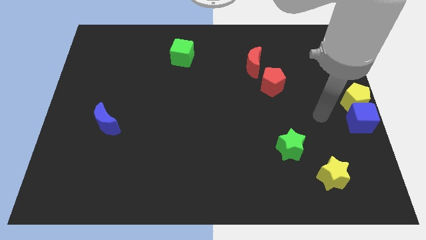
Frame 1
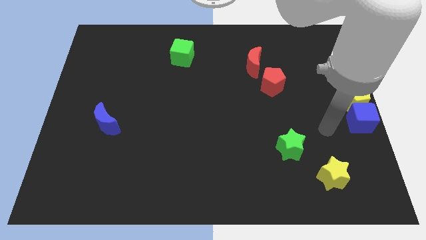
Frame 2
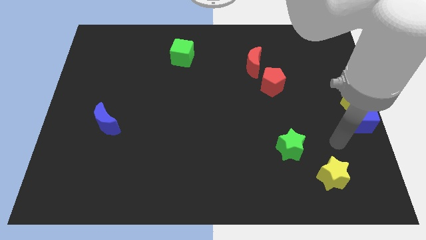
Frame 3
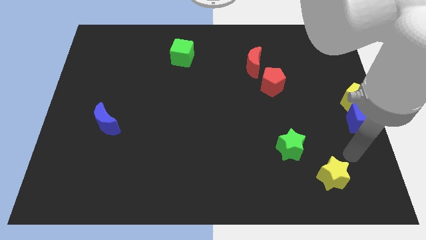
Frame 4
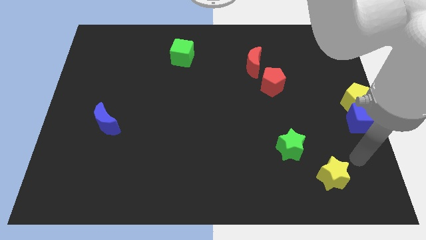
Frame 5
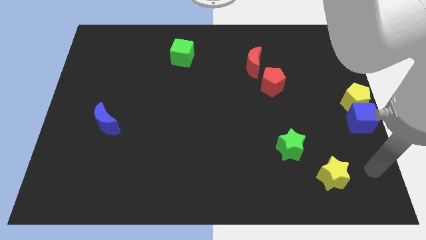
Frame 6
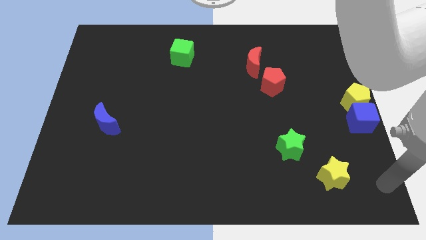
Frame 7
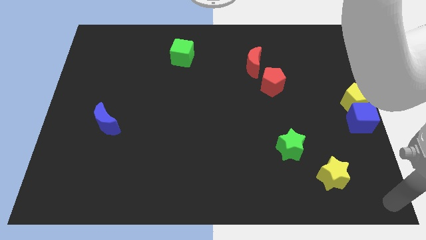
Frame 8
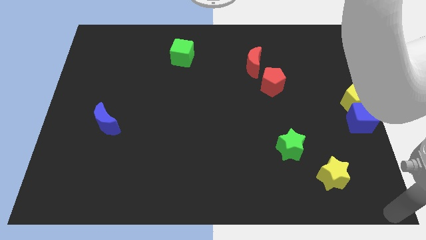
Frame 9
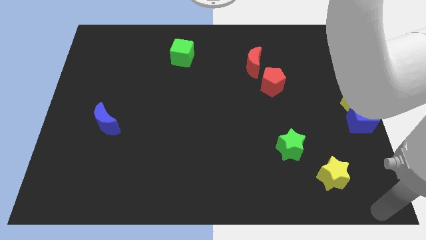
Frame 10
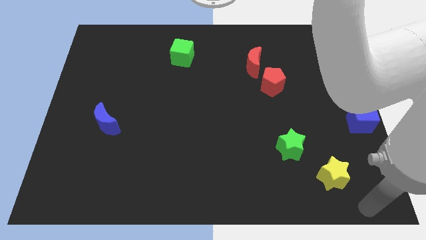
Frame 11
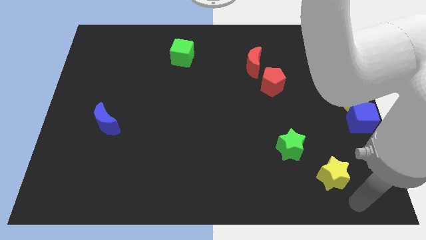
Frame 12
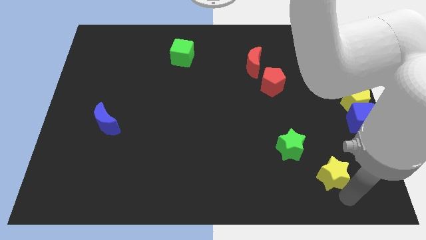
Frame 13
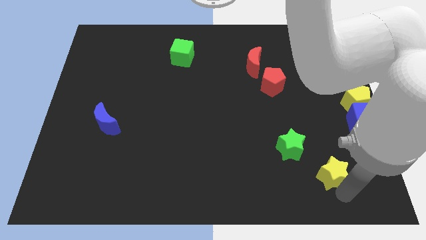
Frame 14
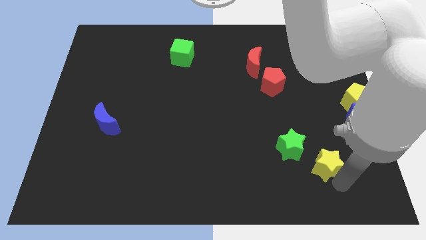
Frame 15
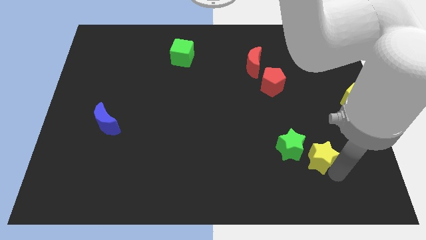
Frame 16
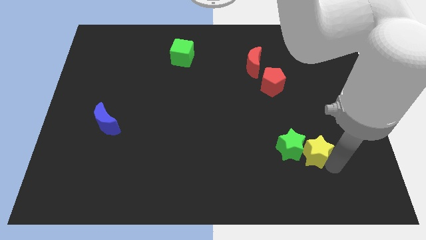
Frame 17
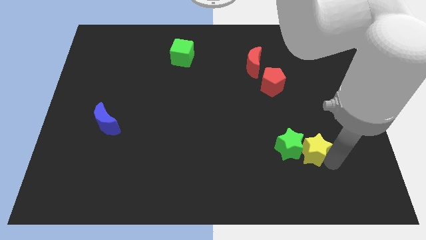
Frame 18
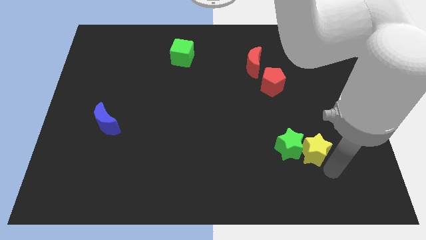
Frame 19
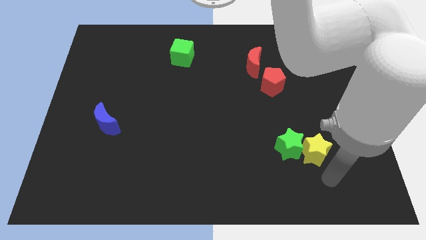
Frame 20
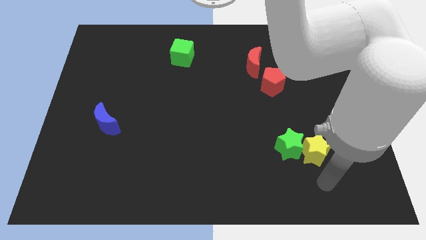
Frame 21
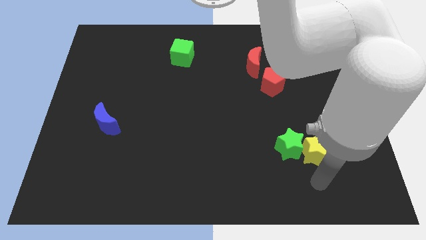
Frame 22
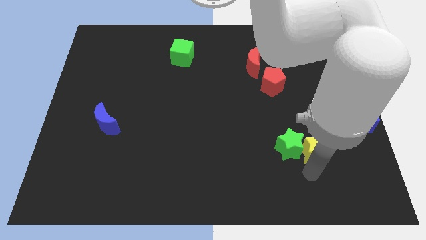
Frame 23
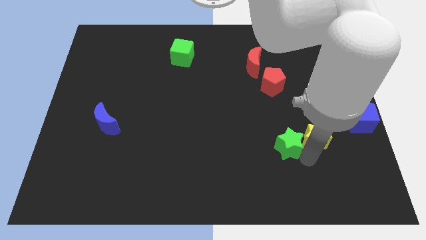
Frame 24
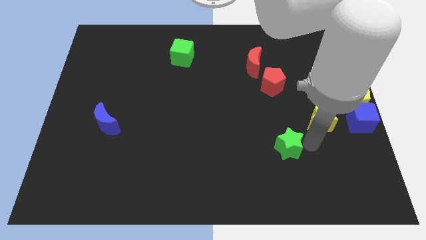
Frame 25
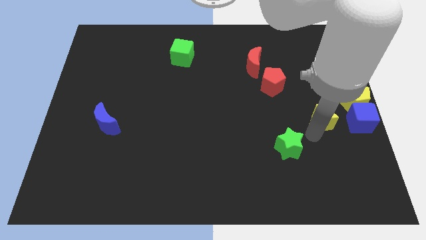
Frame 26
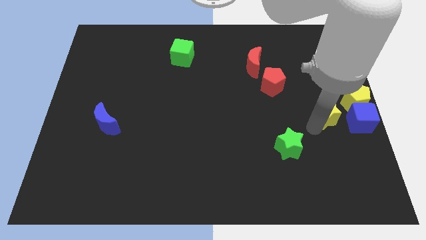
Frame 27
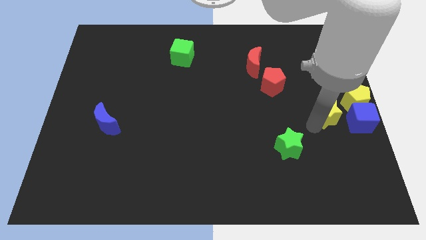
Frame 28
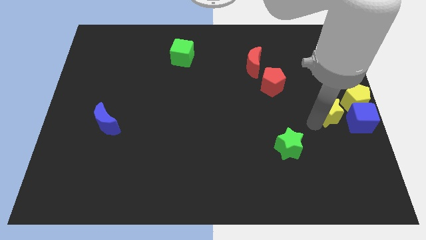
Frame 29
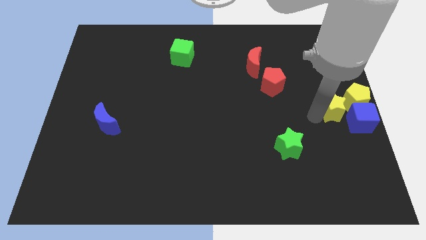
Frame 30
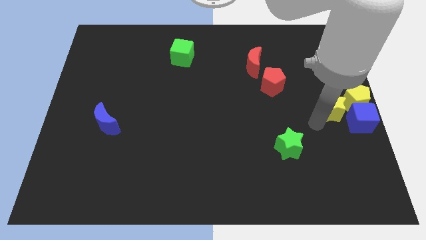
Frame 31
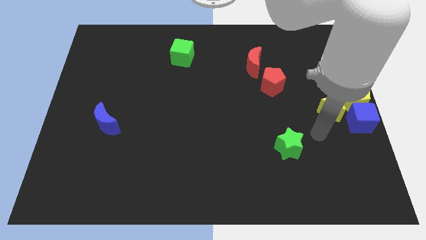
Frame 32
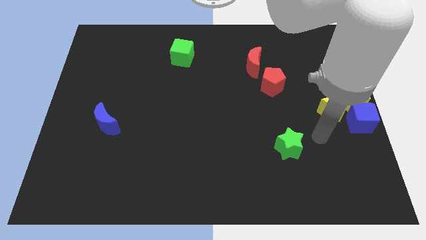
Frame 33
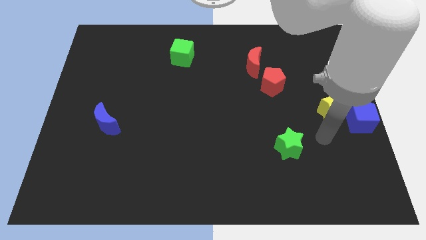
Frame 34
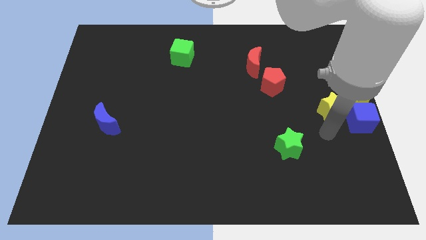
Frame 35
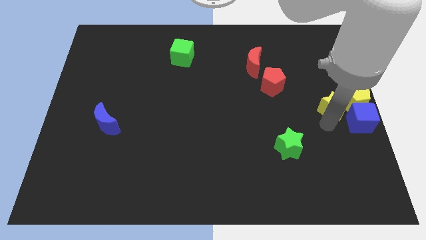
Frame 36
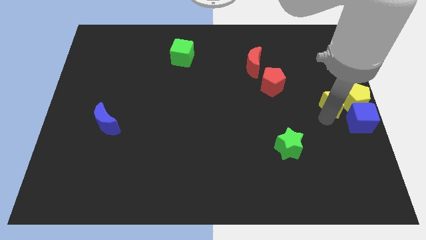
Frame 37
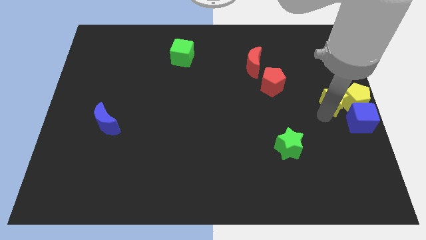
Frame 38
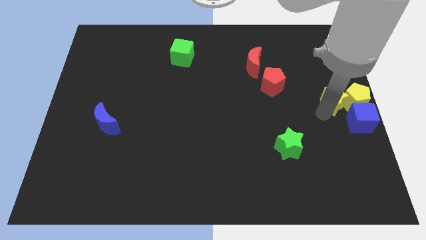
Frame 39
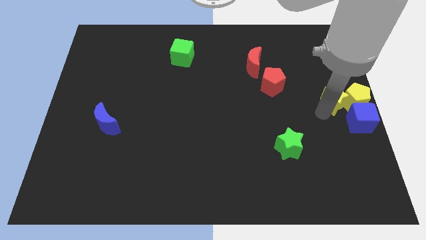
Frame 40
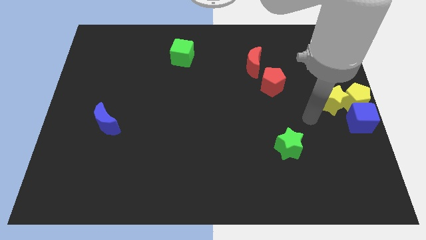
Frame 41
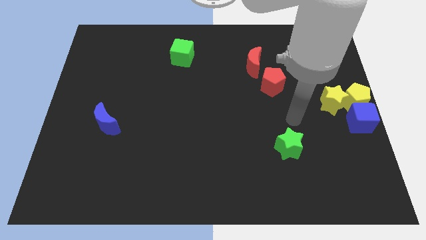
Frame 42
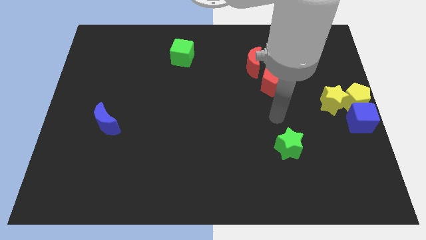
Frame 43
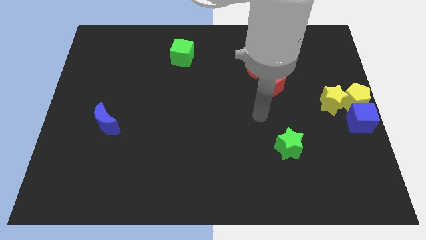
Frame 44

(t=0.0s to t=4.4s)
push the yellow star to the left side of the yellow pentagon

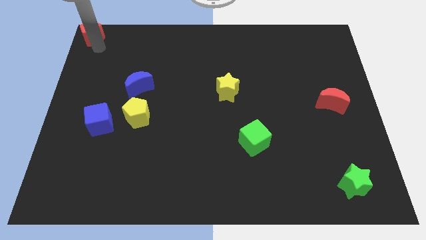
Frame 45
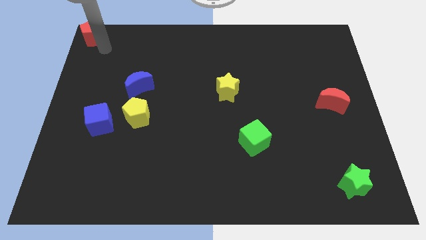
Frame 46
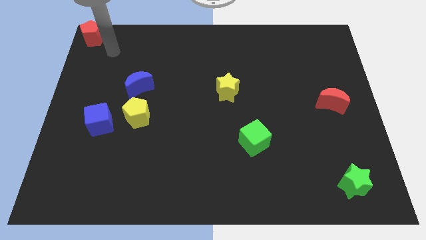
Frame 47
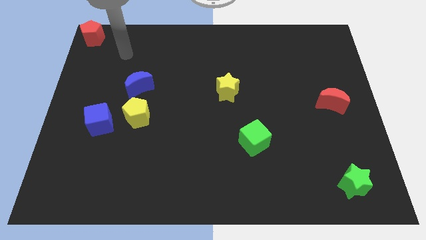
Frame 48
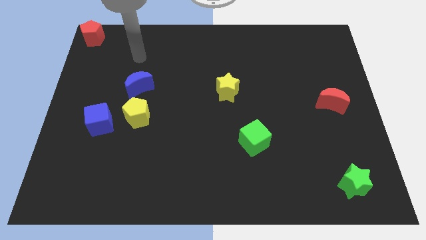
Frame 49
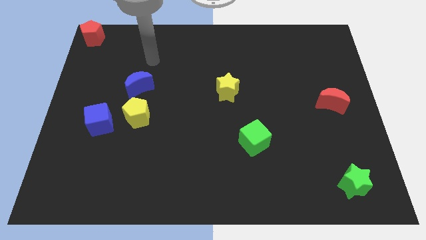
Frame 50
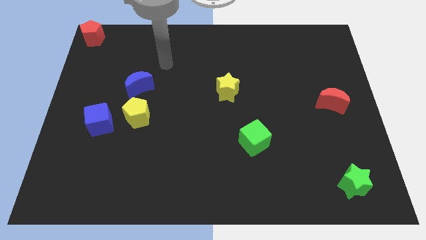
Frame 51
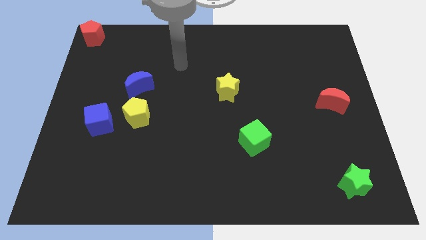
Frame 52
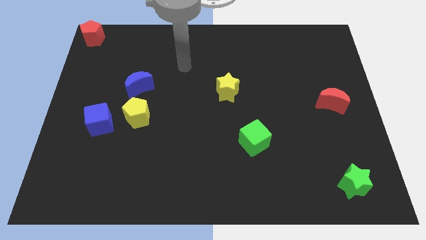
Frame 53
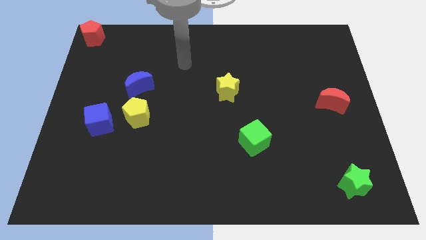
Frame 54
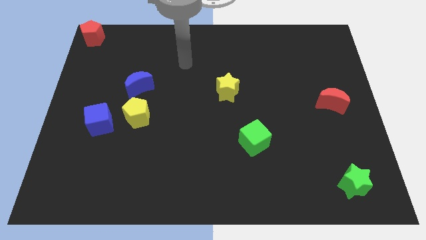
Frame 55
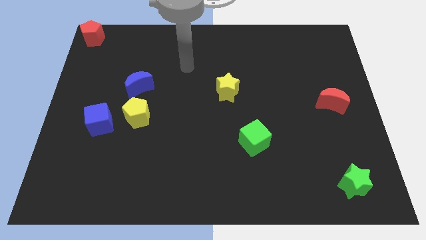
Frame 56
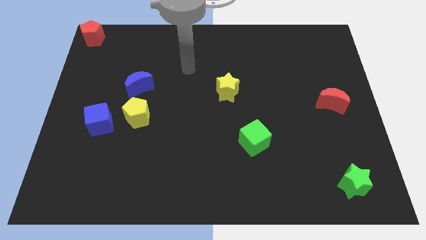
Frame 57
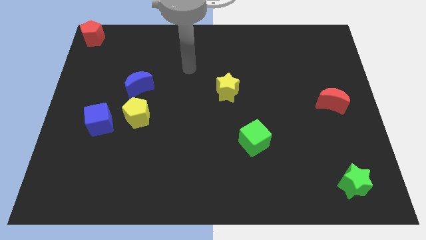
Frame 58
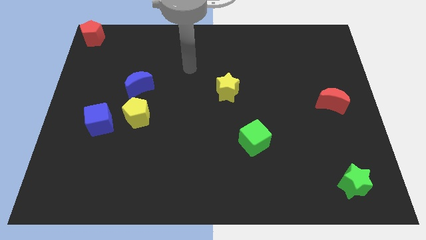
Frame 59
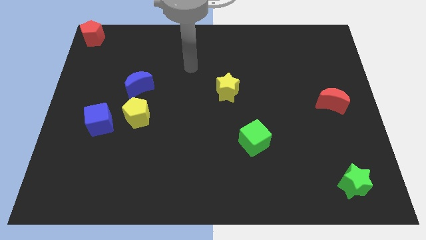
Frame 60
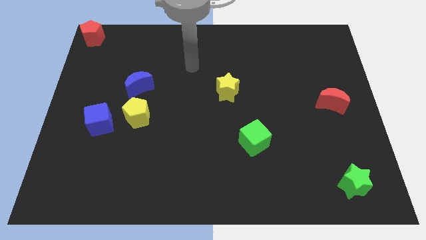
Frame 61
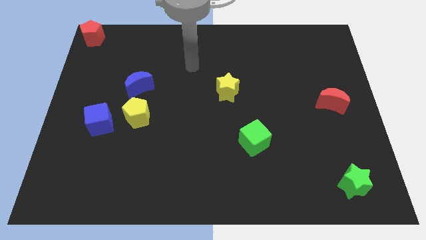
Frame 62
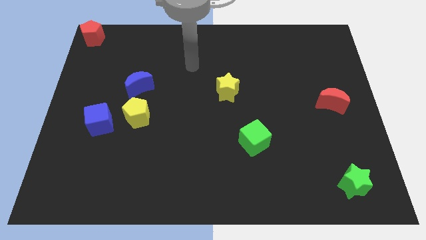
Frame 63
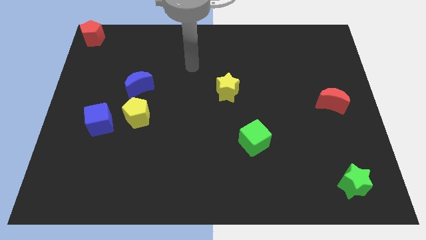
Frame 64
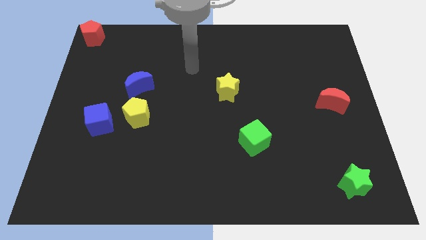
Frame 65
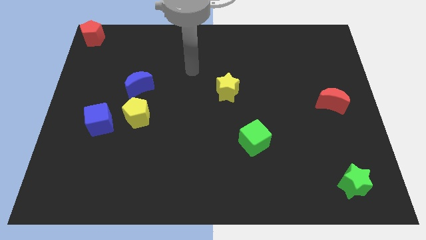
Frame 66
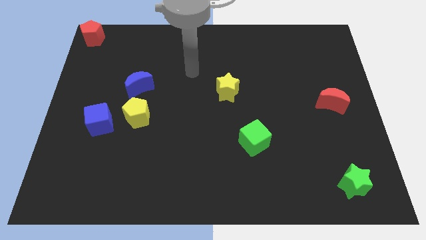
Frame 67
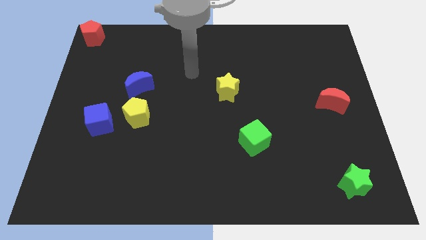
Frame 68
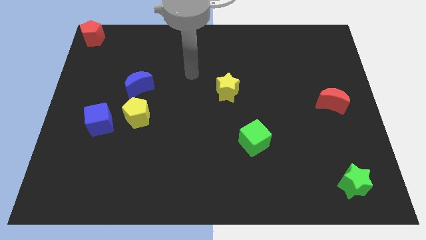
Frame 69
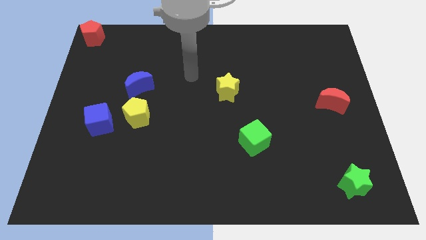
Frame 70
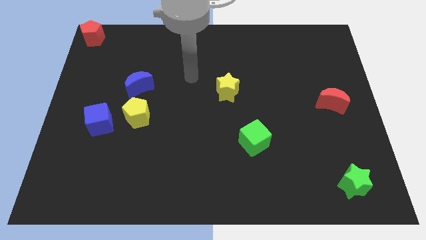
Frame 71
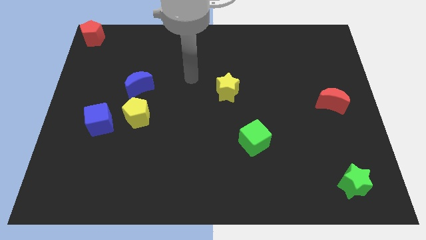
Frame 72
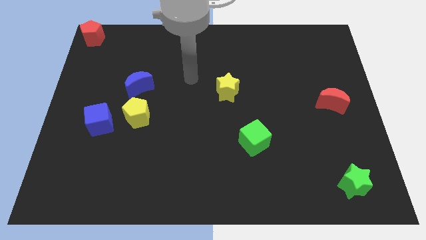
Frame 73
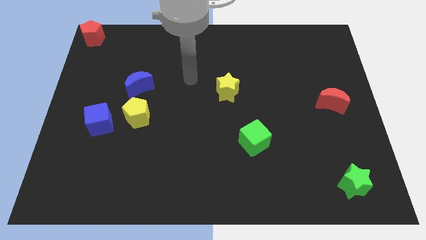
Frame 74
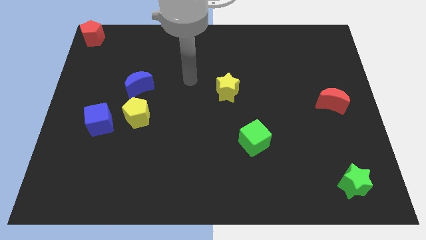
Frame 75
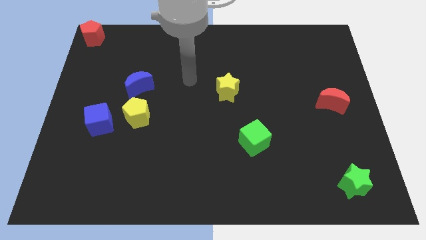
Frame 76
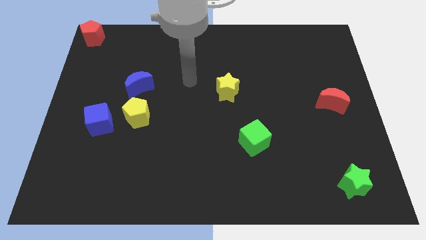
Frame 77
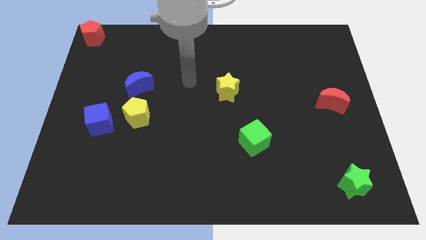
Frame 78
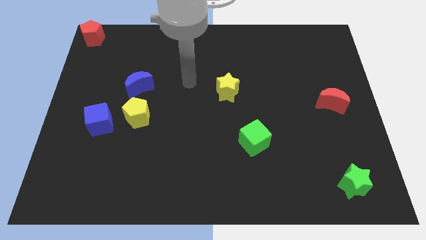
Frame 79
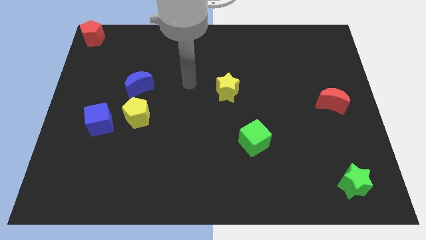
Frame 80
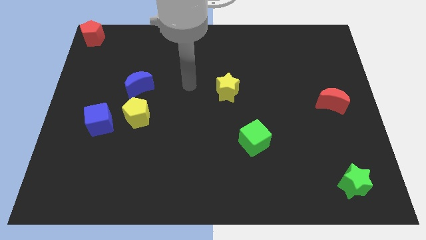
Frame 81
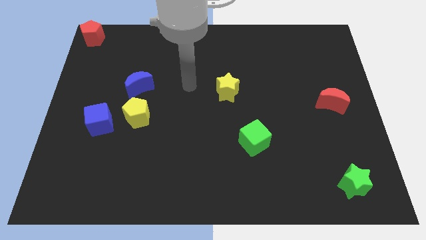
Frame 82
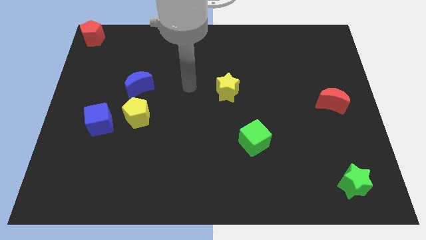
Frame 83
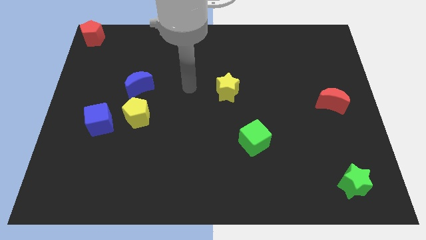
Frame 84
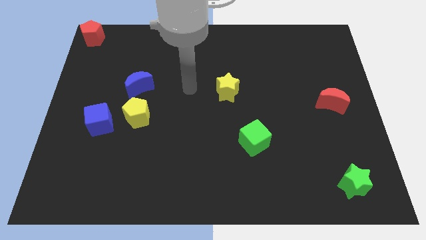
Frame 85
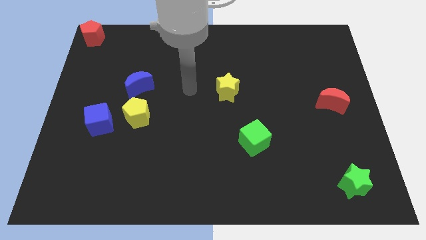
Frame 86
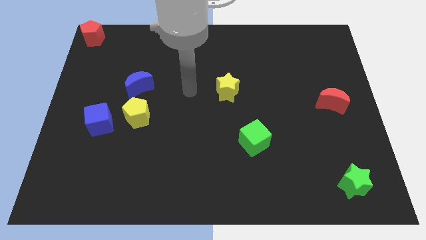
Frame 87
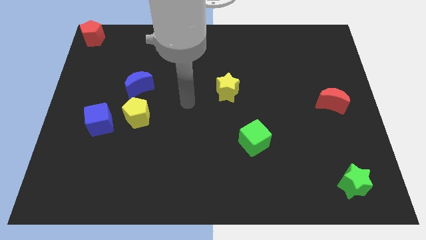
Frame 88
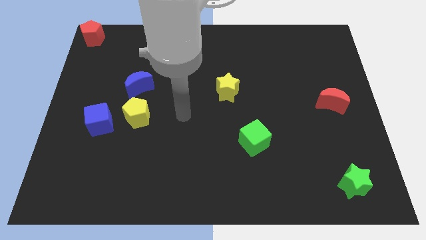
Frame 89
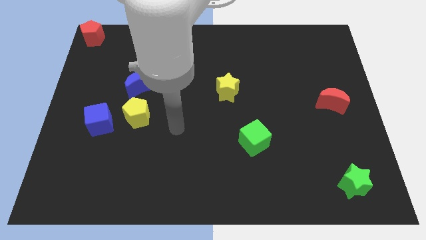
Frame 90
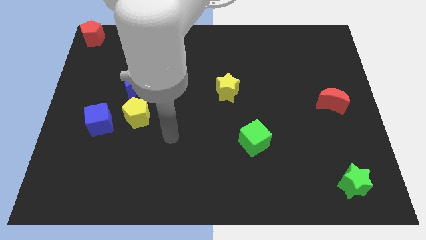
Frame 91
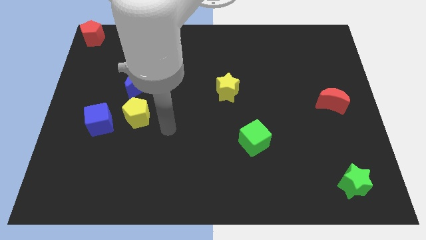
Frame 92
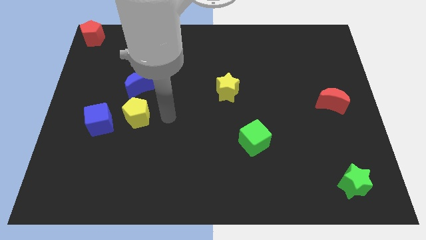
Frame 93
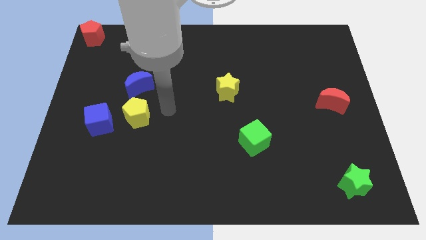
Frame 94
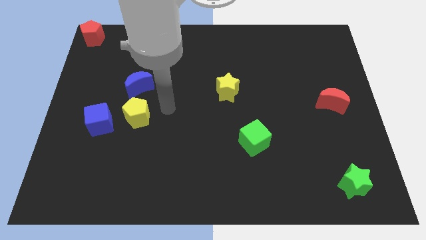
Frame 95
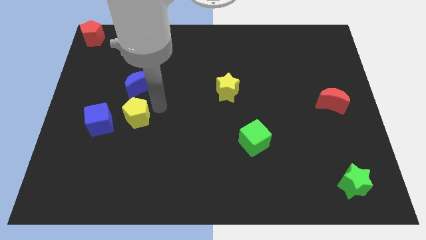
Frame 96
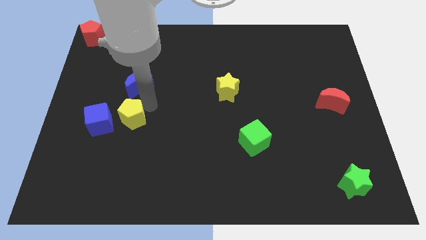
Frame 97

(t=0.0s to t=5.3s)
move your arm towards the blue crescent
